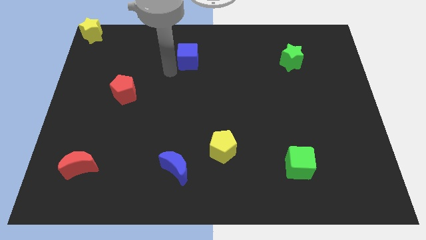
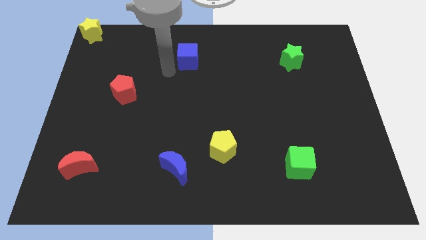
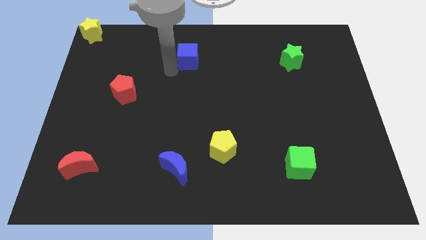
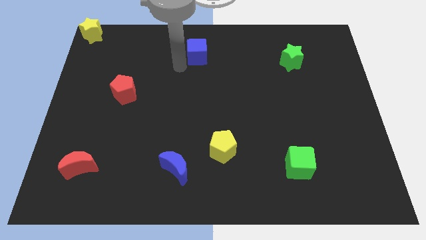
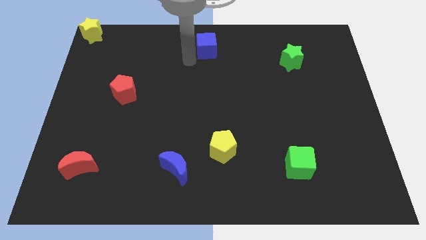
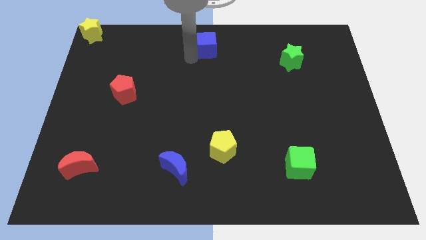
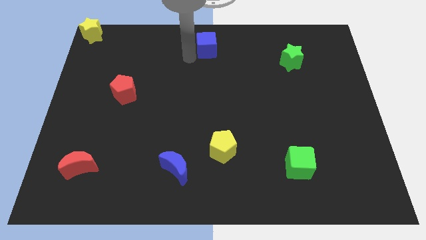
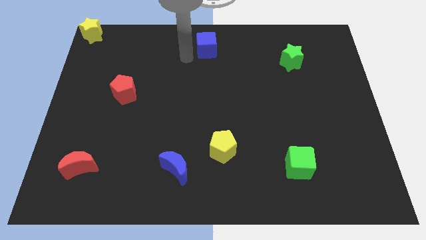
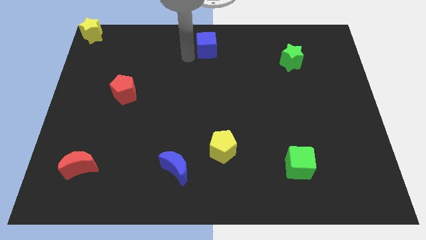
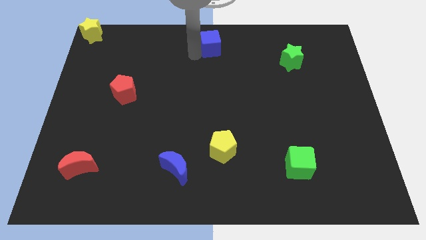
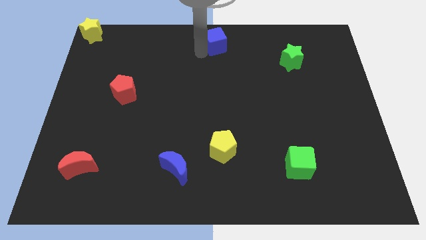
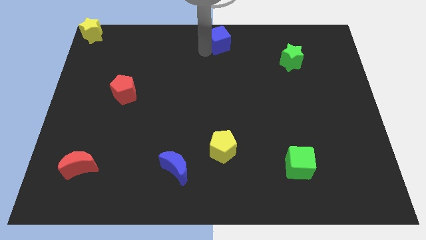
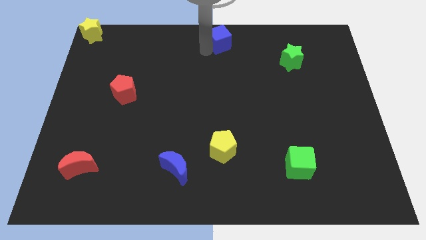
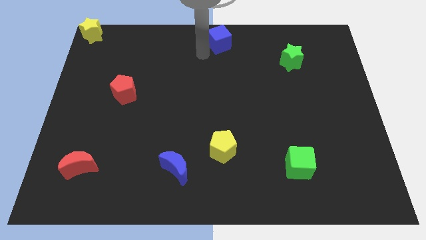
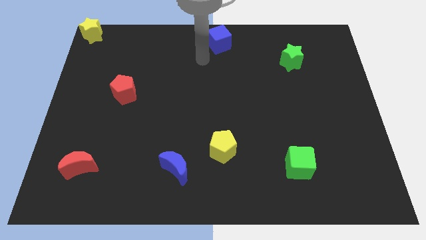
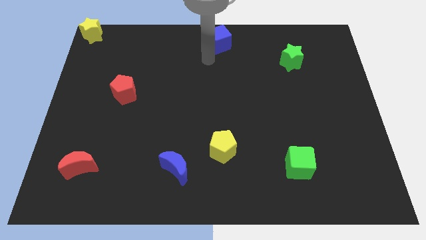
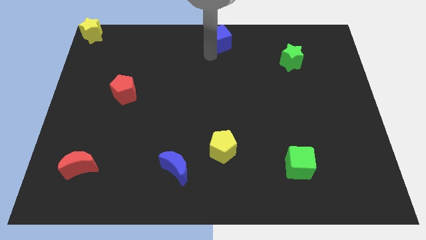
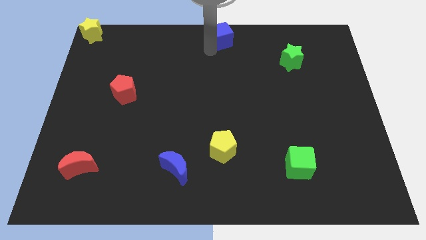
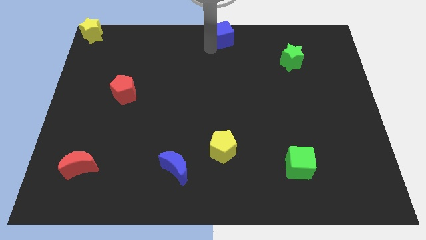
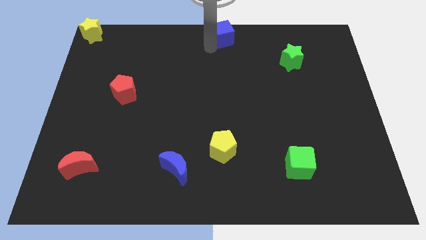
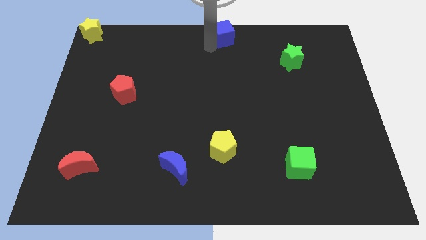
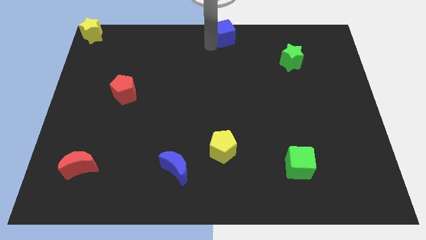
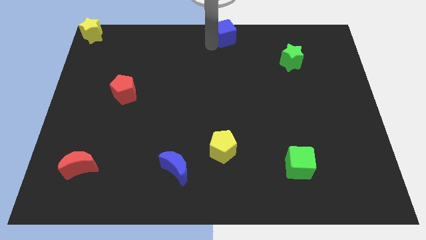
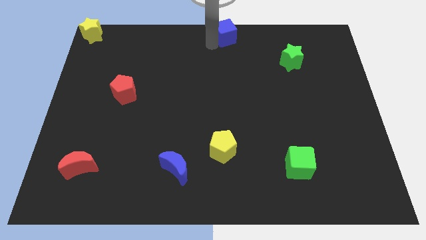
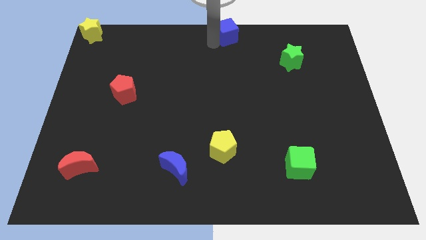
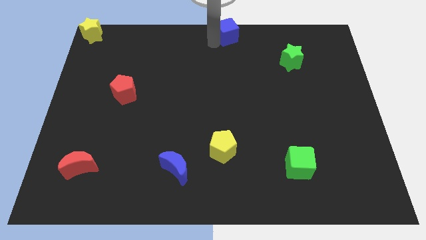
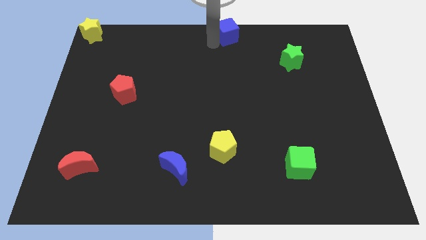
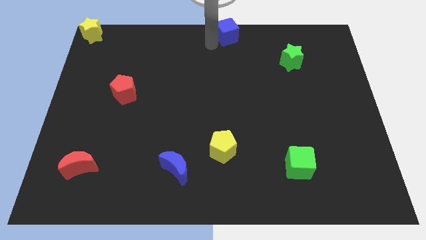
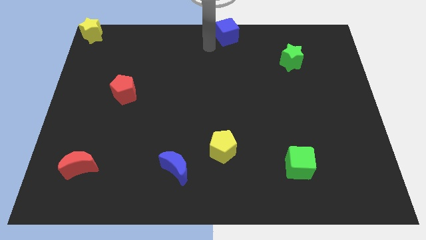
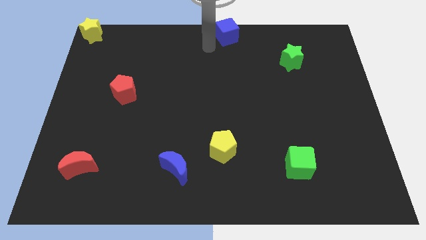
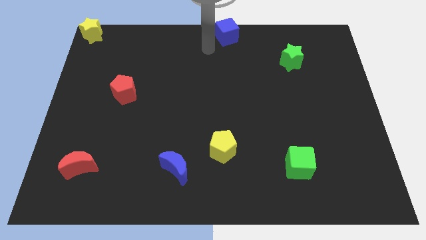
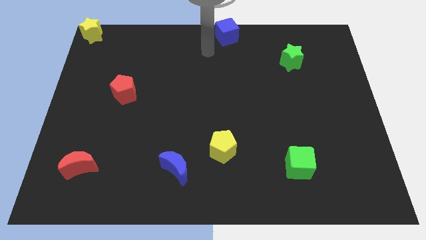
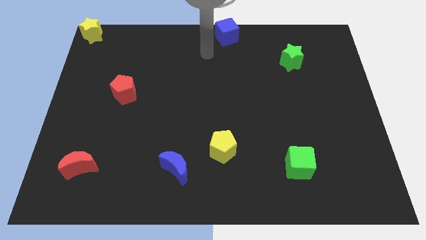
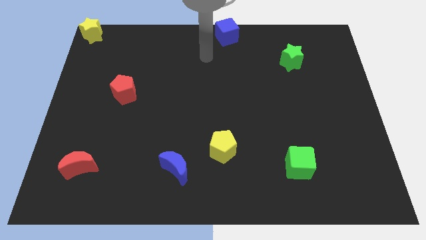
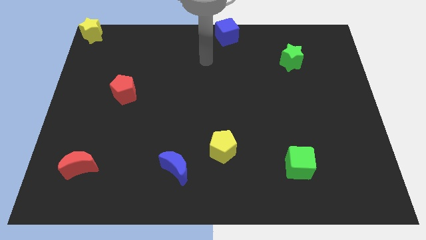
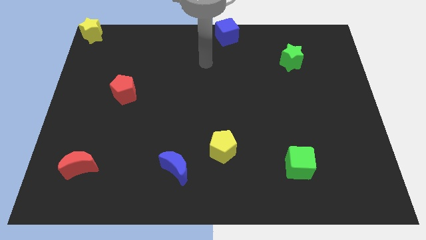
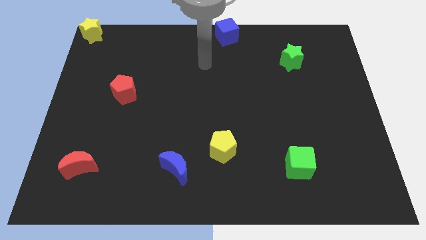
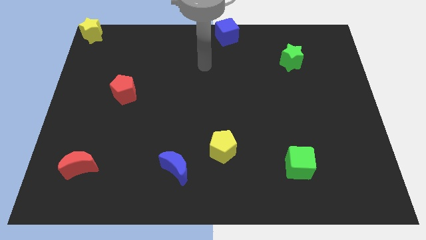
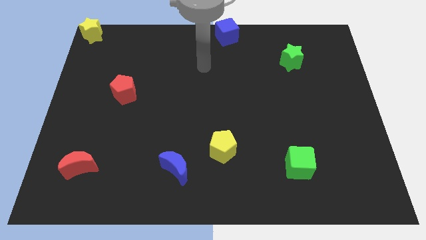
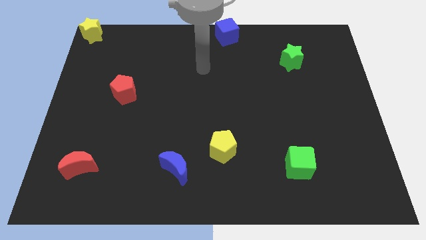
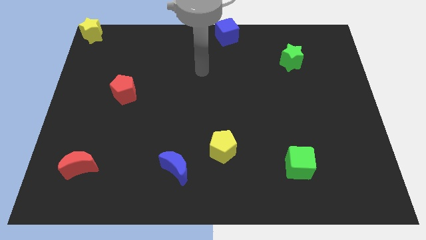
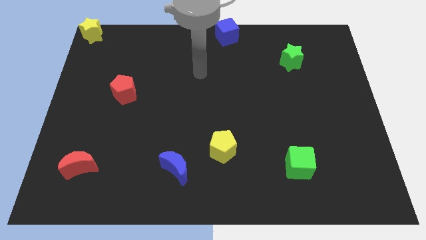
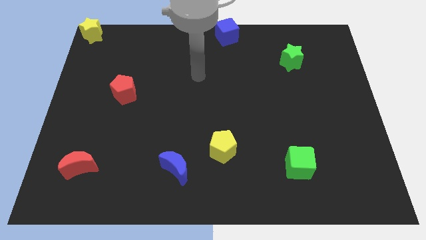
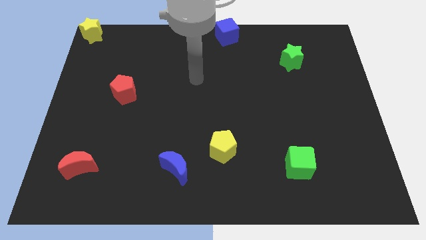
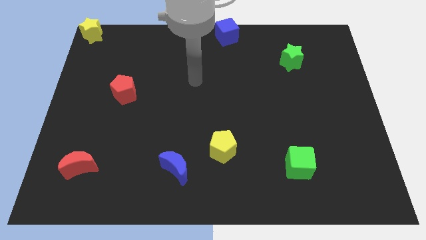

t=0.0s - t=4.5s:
place blue cube to the center top of the board

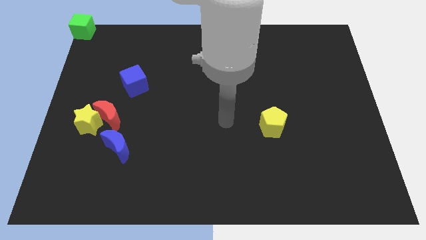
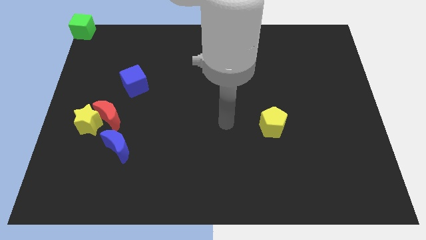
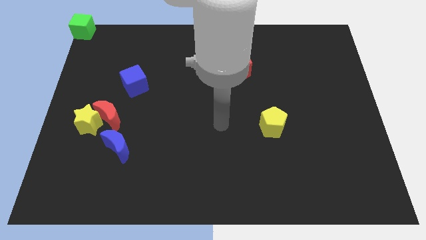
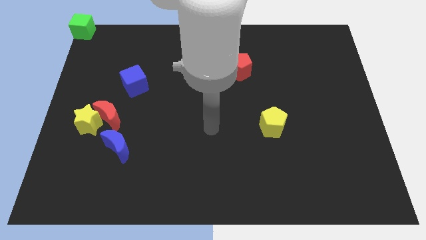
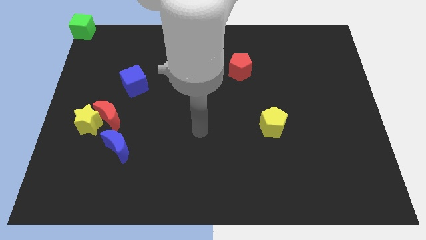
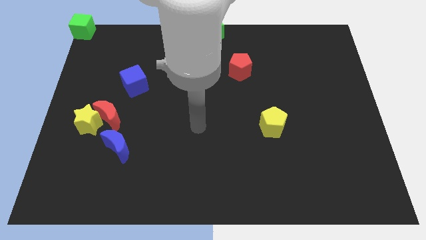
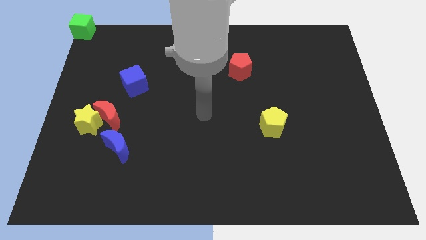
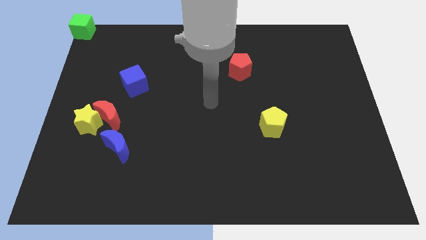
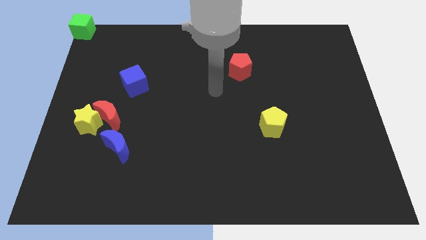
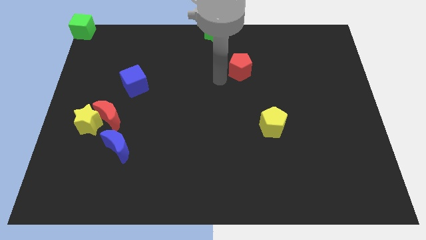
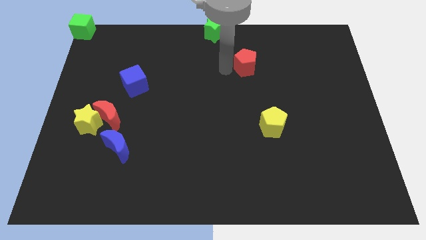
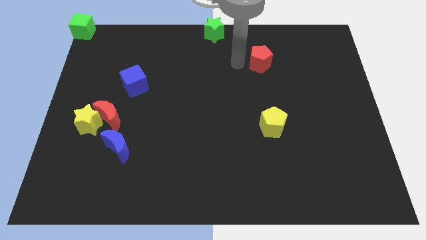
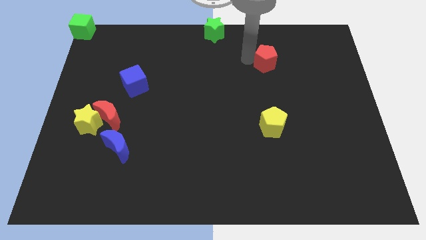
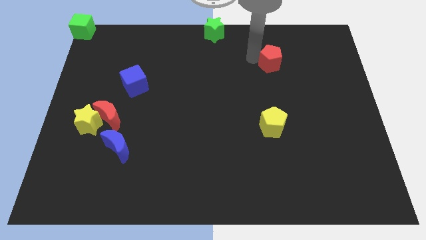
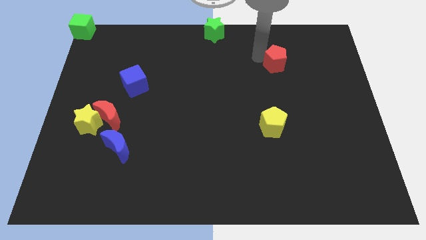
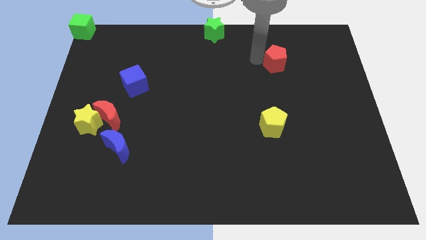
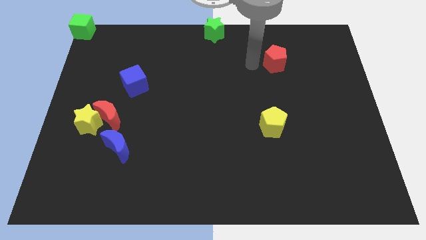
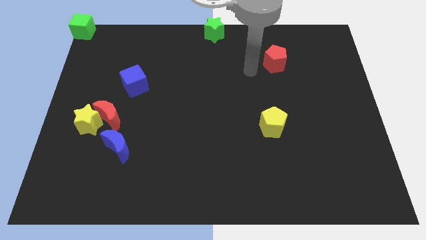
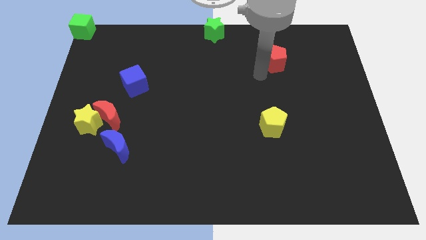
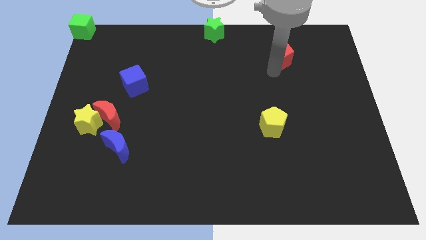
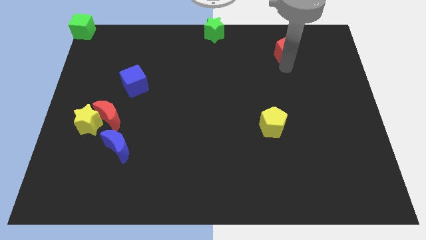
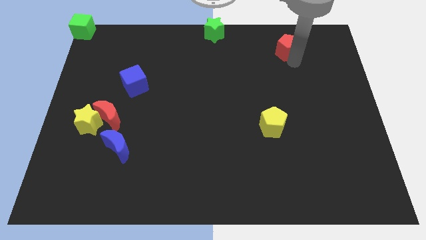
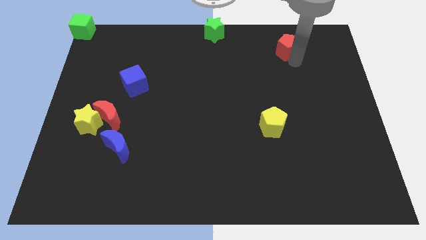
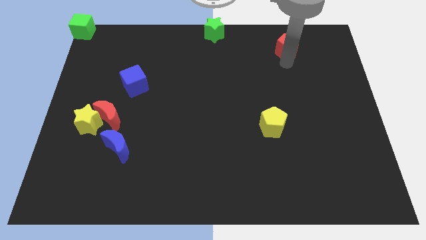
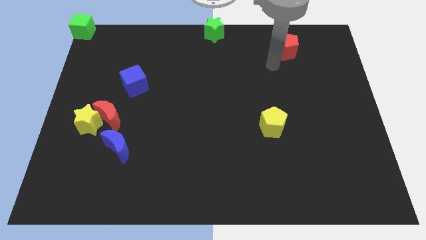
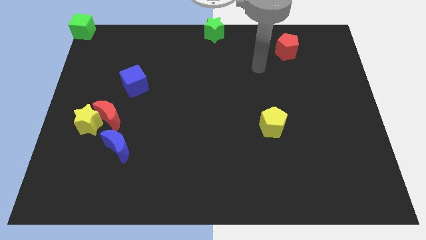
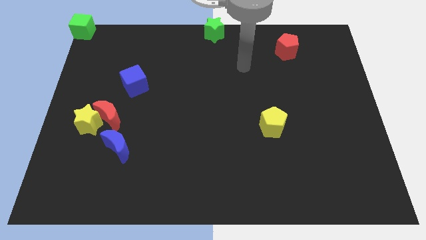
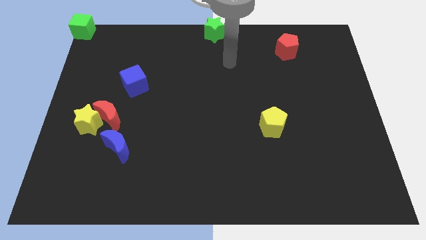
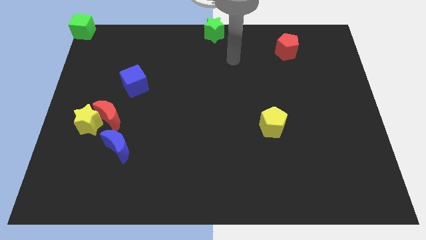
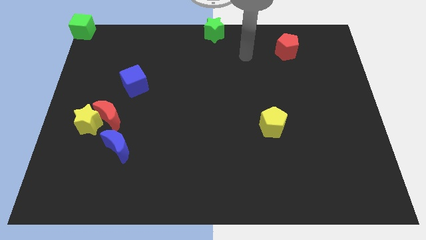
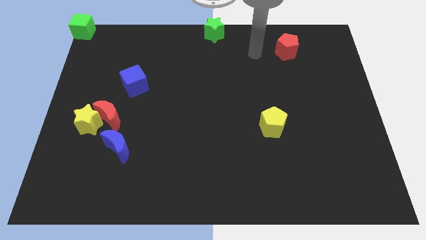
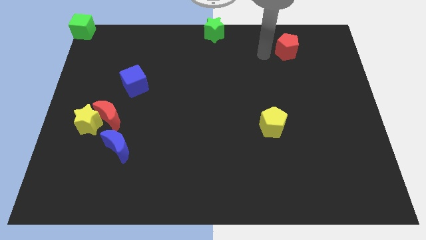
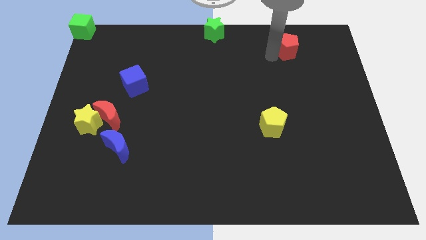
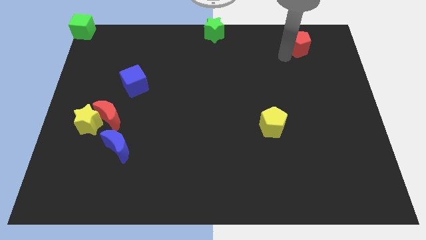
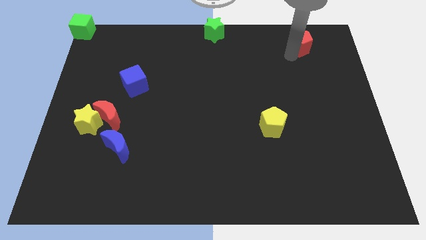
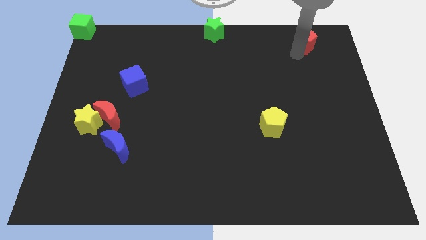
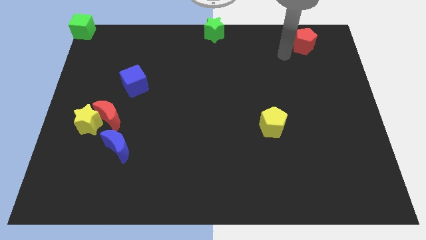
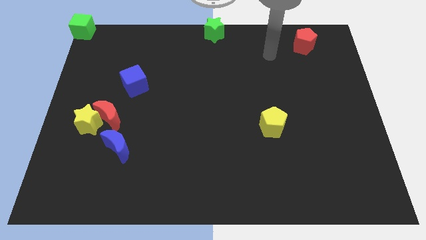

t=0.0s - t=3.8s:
move the red pentagon towards top right side of the board

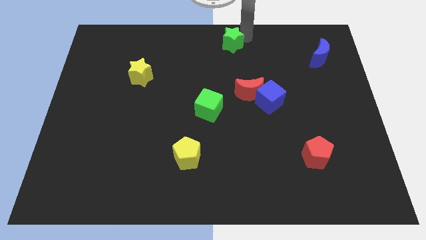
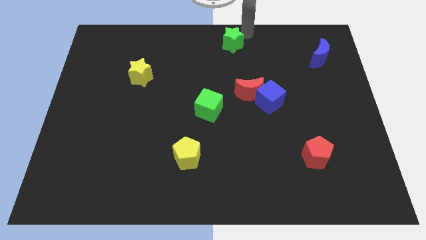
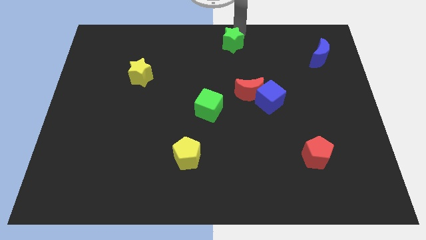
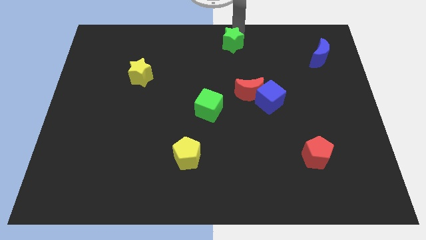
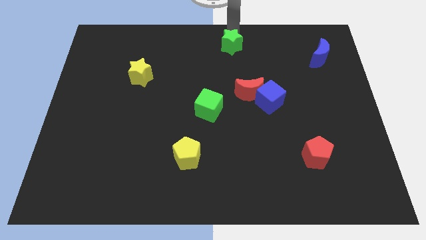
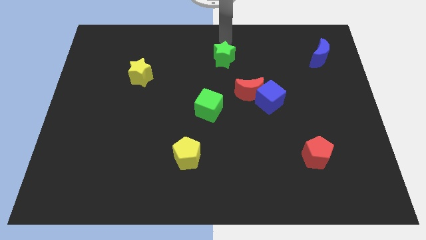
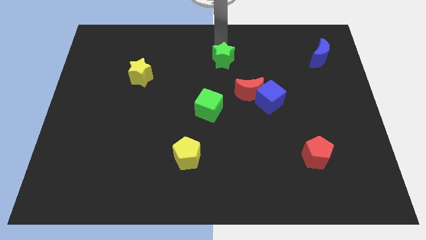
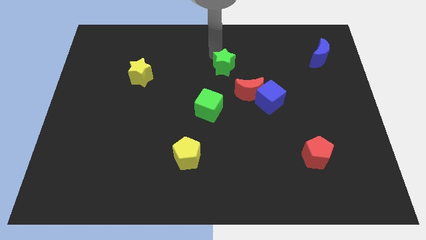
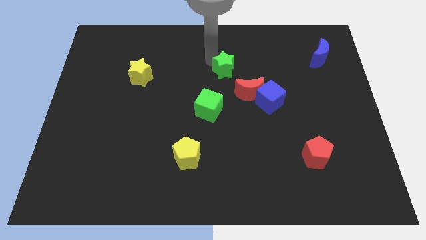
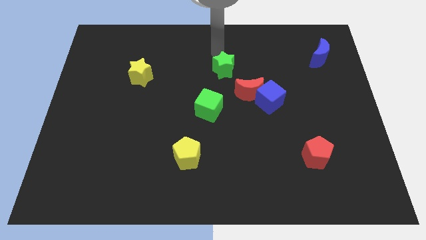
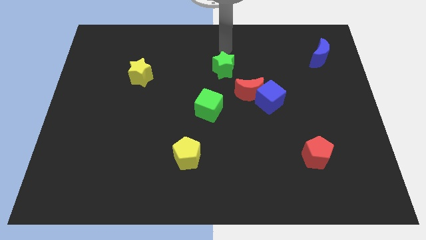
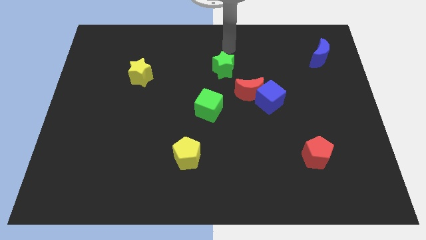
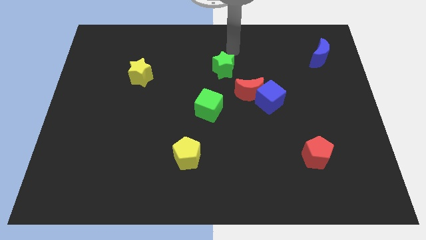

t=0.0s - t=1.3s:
move green star left above red moon
